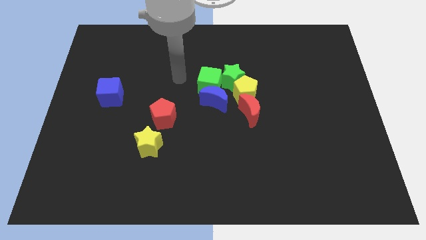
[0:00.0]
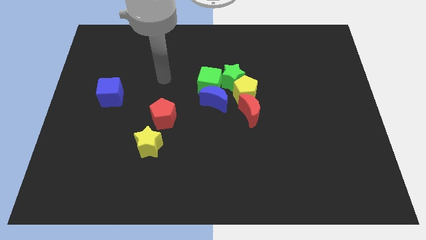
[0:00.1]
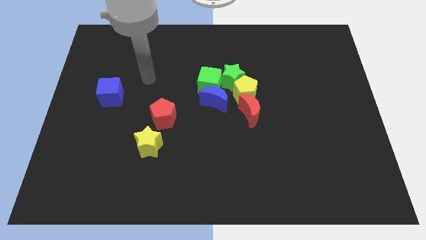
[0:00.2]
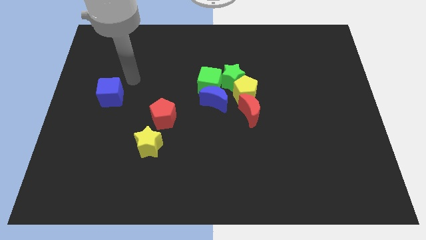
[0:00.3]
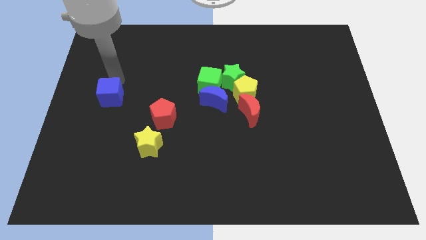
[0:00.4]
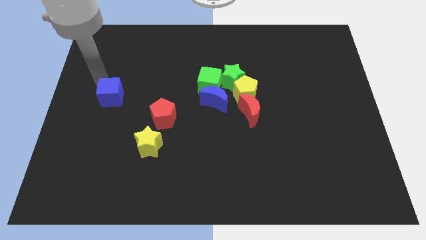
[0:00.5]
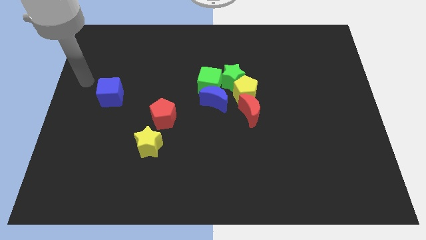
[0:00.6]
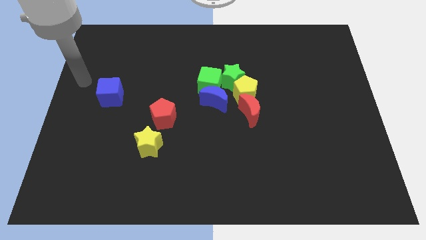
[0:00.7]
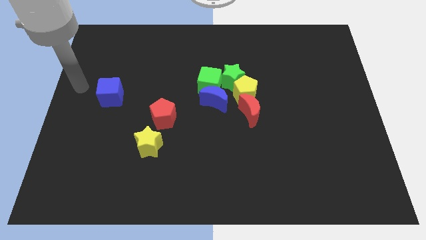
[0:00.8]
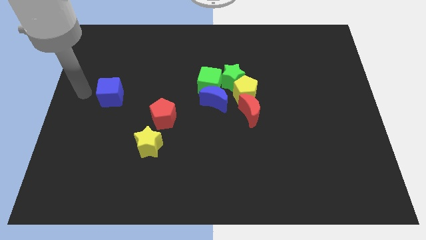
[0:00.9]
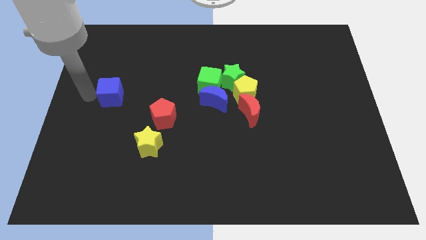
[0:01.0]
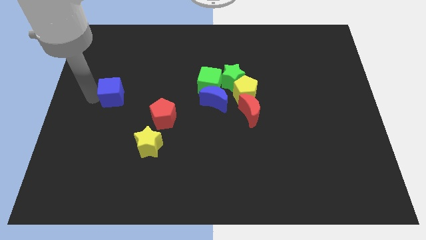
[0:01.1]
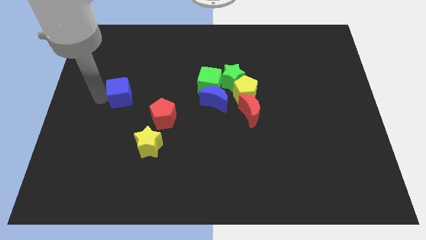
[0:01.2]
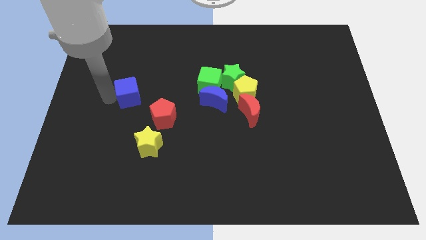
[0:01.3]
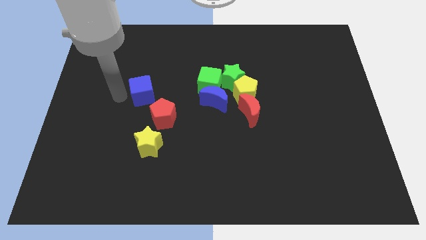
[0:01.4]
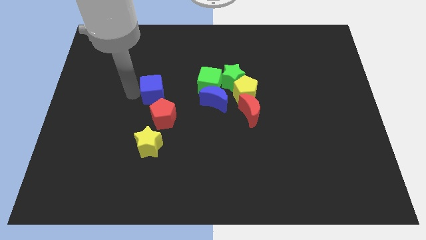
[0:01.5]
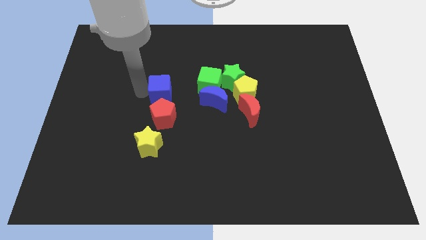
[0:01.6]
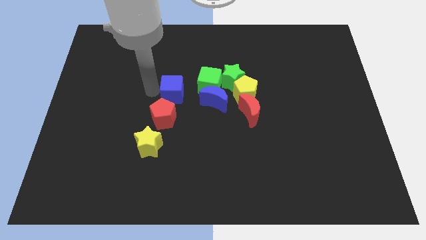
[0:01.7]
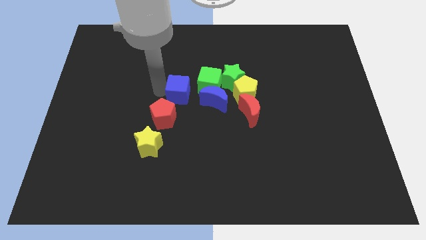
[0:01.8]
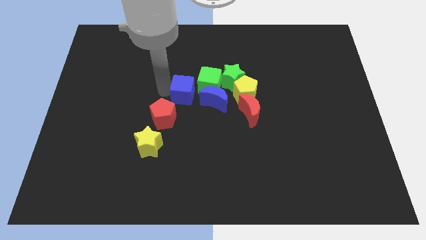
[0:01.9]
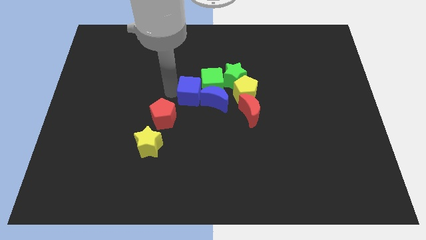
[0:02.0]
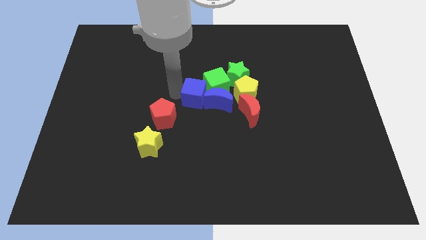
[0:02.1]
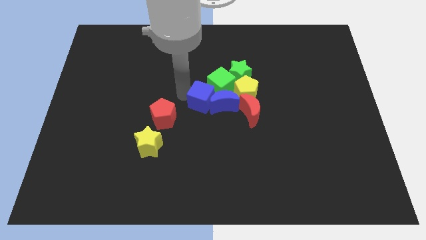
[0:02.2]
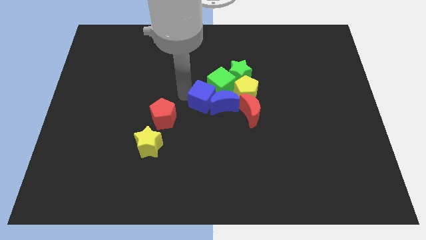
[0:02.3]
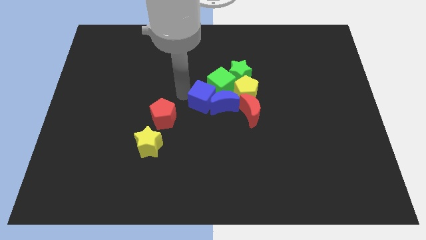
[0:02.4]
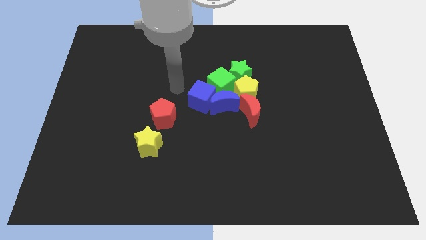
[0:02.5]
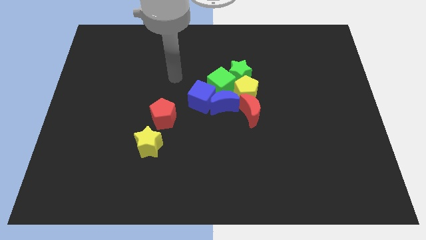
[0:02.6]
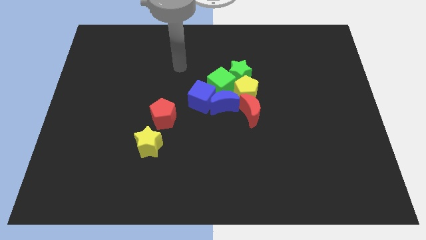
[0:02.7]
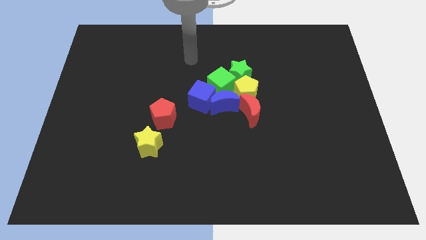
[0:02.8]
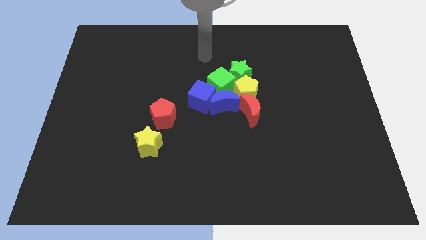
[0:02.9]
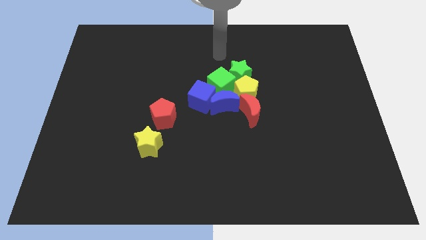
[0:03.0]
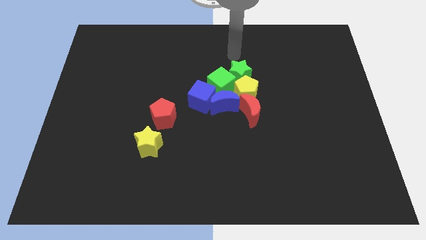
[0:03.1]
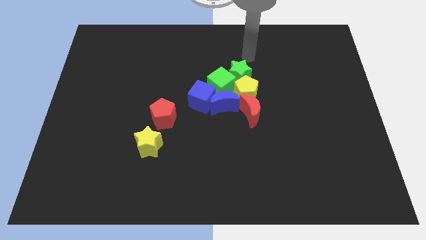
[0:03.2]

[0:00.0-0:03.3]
push the blue cube into the blue crescent

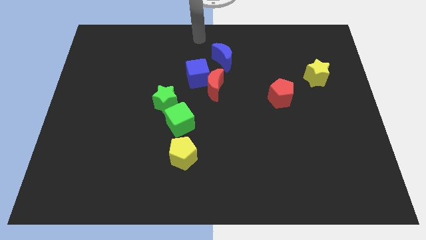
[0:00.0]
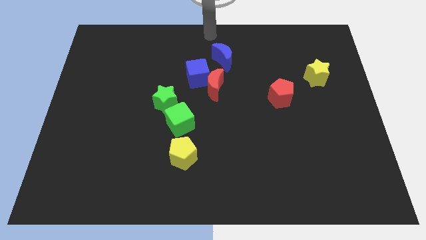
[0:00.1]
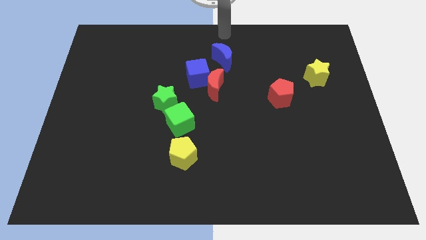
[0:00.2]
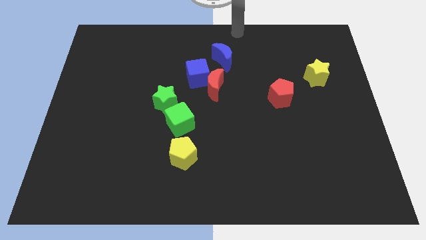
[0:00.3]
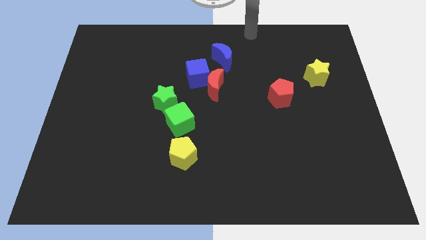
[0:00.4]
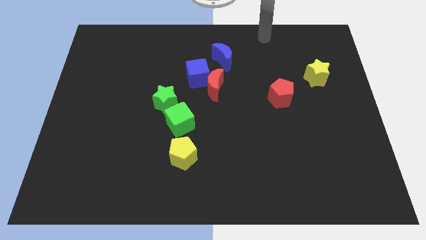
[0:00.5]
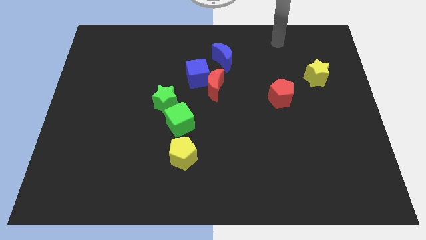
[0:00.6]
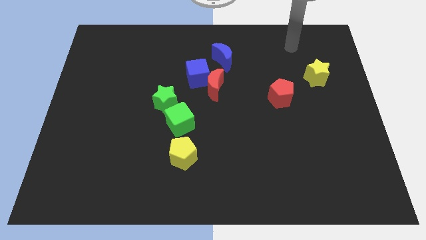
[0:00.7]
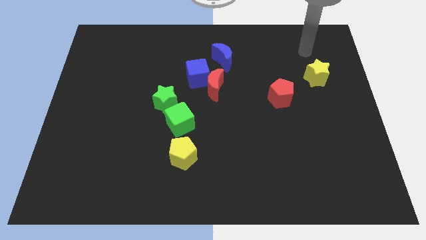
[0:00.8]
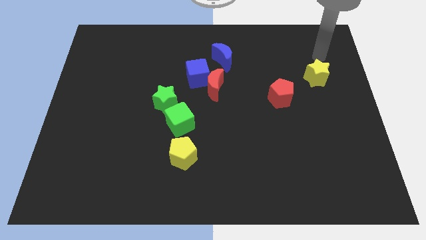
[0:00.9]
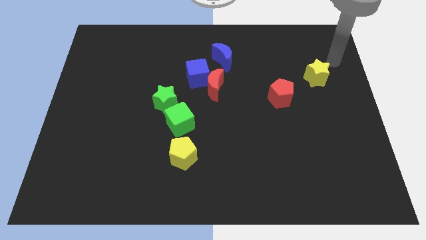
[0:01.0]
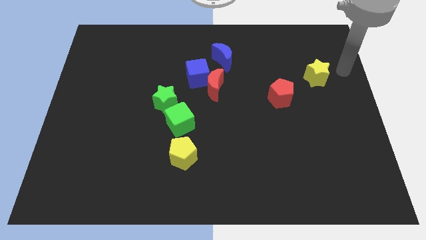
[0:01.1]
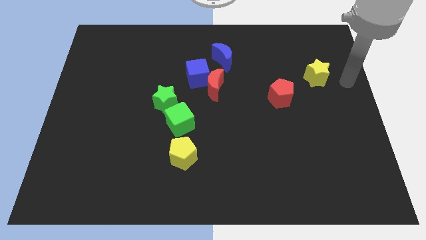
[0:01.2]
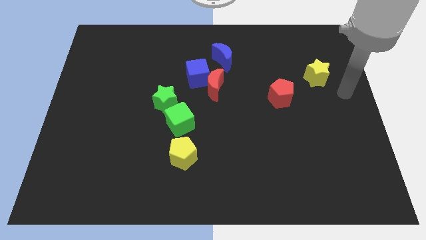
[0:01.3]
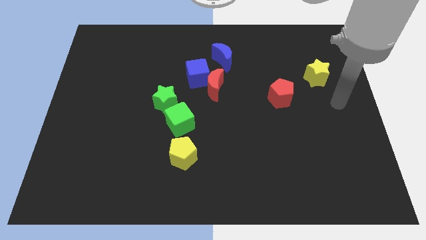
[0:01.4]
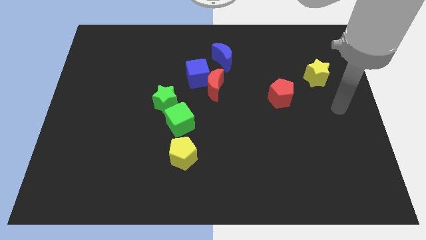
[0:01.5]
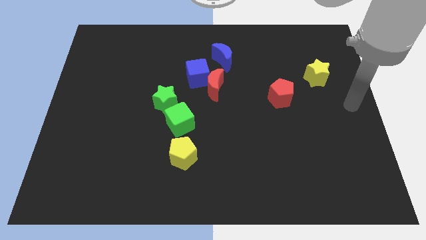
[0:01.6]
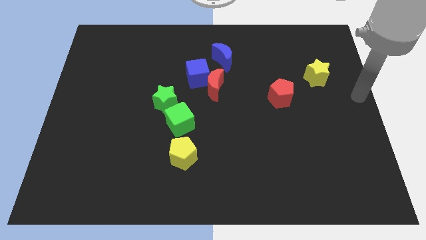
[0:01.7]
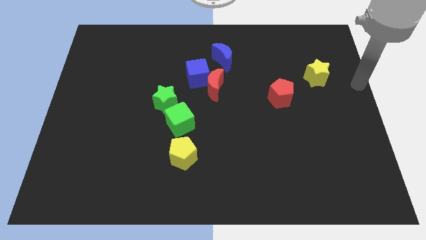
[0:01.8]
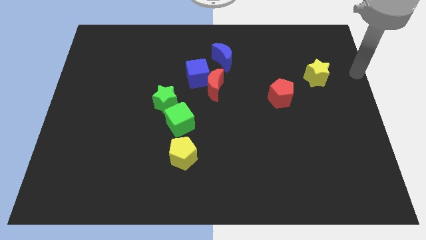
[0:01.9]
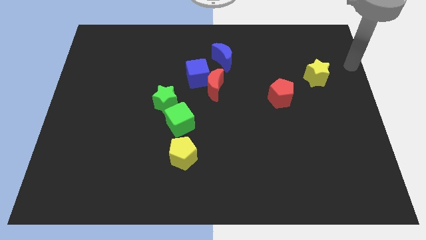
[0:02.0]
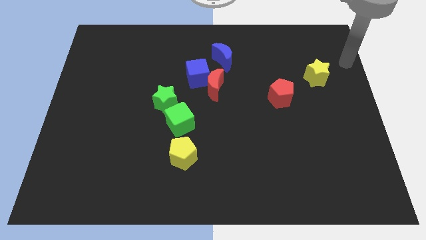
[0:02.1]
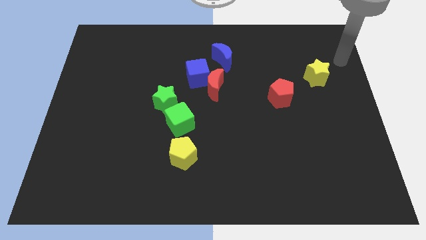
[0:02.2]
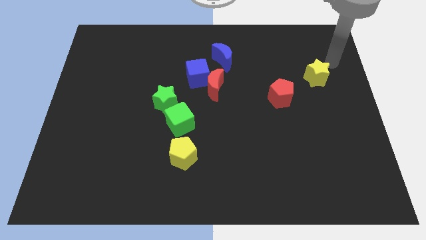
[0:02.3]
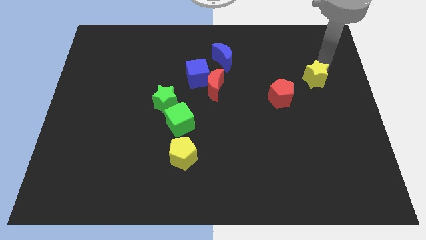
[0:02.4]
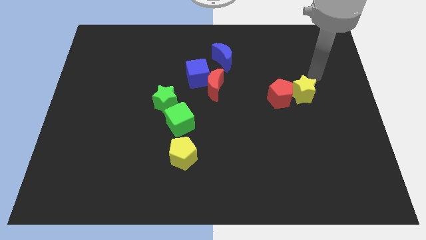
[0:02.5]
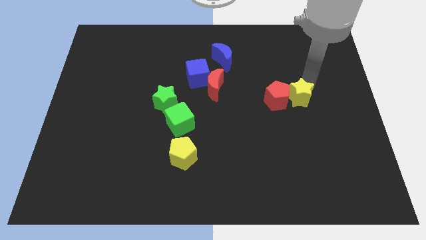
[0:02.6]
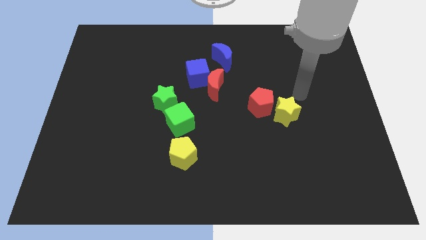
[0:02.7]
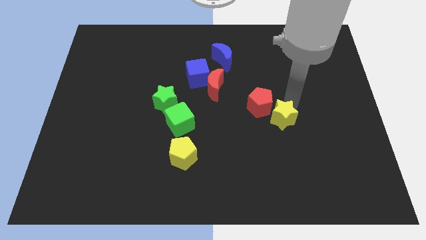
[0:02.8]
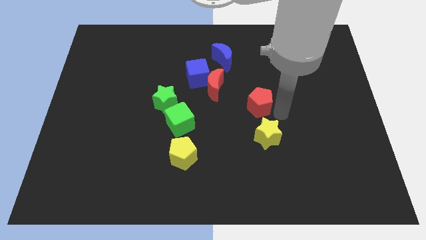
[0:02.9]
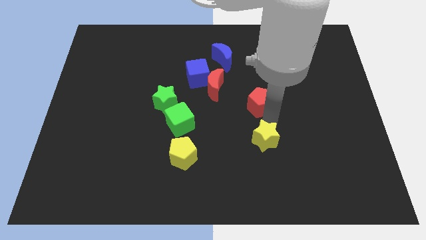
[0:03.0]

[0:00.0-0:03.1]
push the yellow star into red pentagon

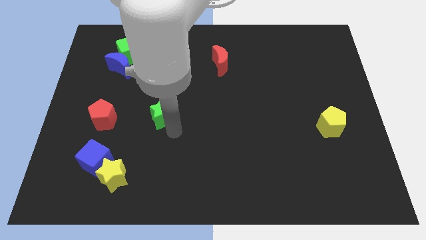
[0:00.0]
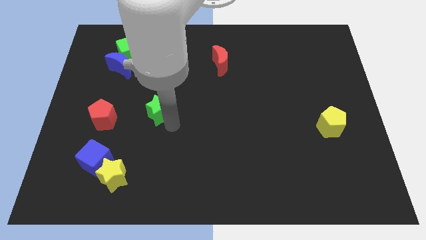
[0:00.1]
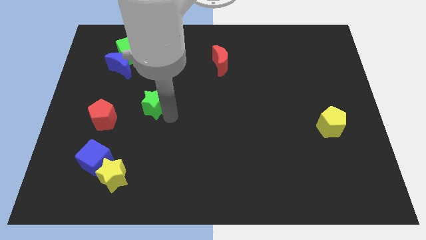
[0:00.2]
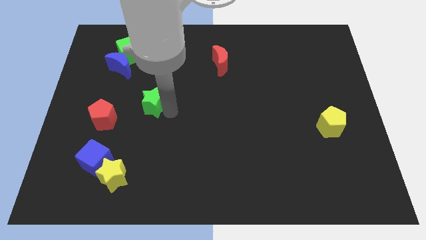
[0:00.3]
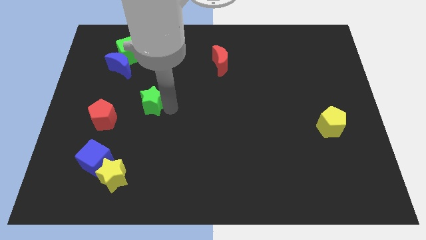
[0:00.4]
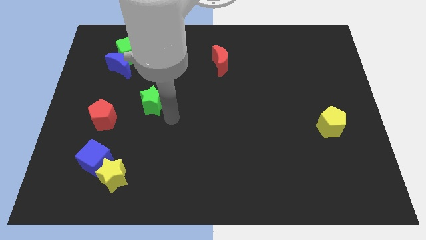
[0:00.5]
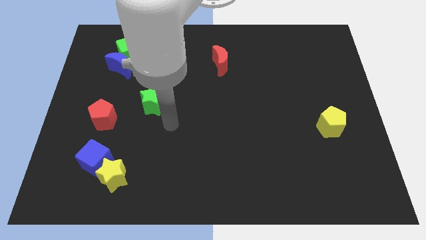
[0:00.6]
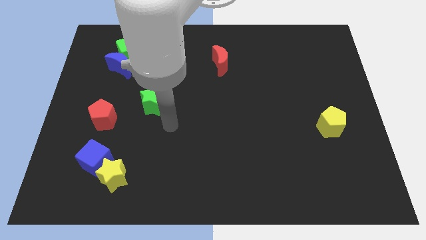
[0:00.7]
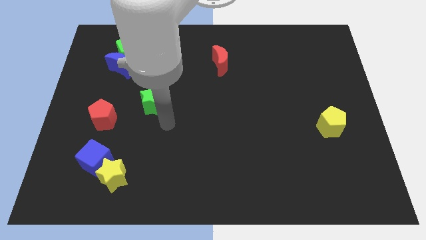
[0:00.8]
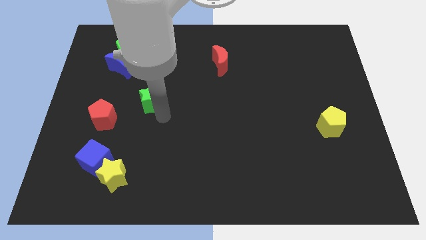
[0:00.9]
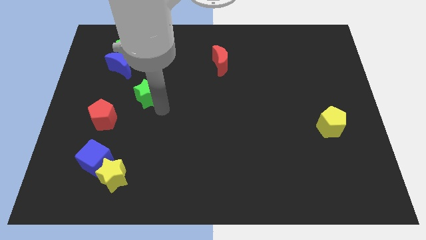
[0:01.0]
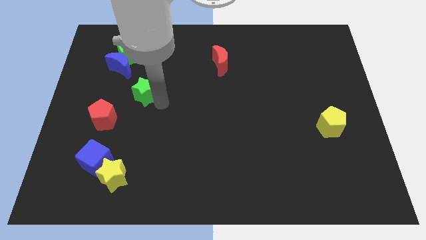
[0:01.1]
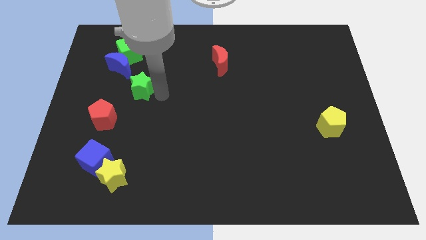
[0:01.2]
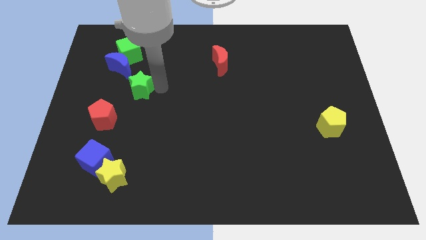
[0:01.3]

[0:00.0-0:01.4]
move the green star diagonally top right to the red pentagon

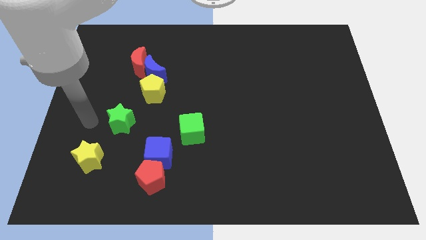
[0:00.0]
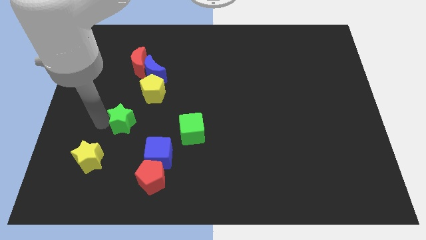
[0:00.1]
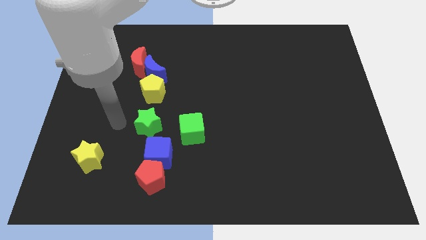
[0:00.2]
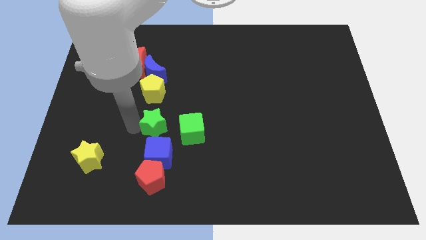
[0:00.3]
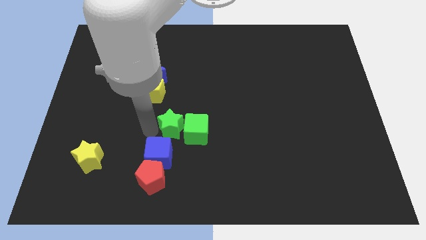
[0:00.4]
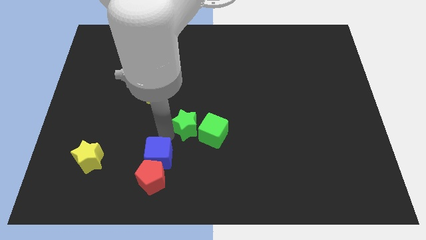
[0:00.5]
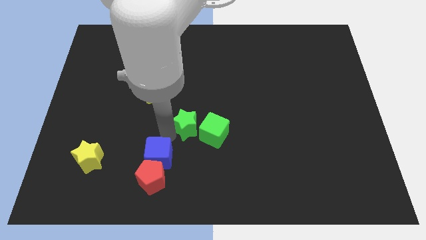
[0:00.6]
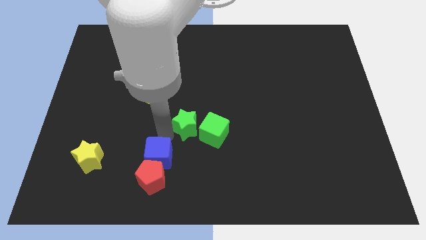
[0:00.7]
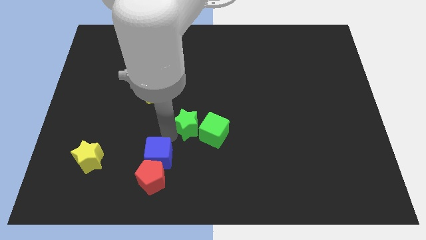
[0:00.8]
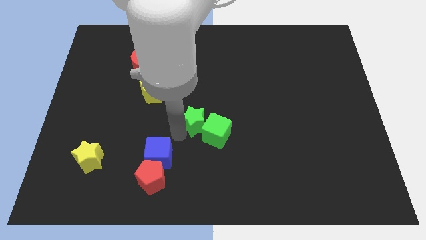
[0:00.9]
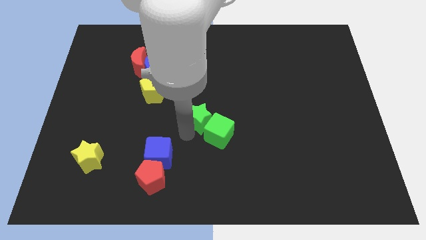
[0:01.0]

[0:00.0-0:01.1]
push the green star into the green cube

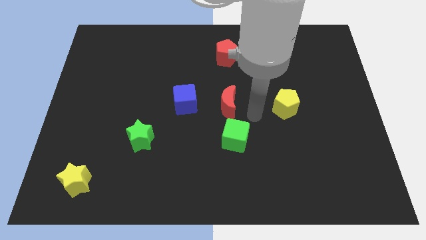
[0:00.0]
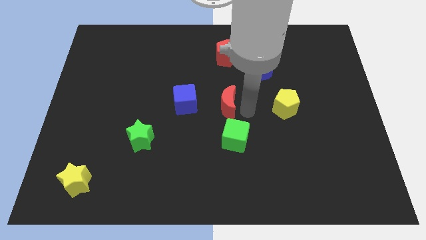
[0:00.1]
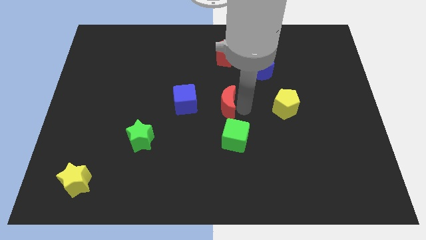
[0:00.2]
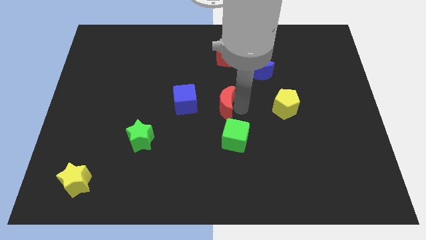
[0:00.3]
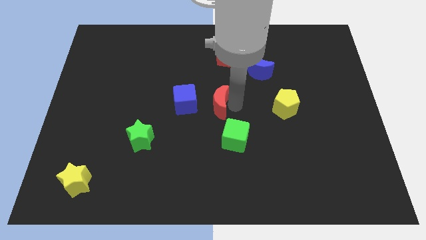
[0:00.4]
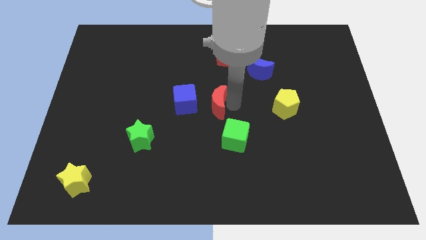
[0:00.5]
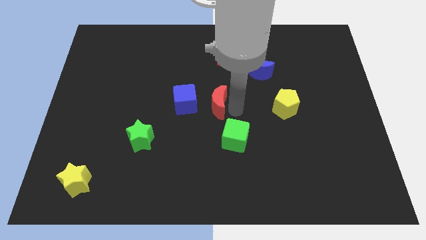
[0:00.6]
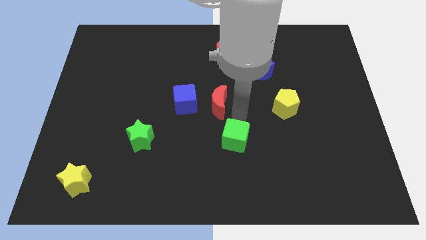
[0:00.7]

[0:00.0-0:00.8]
place the red crescent at the center of the board
